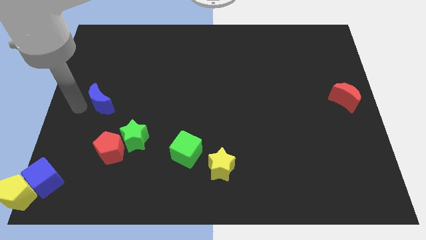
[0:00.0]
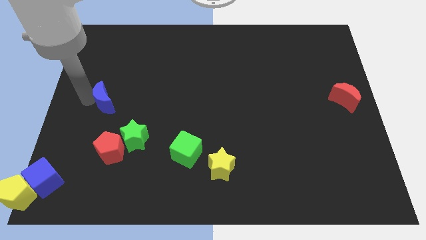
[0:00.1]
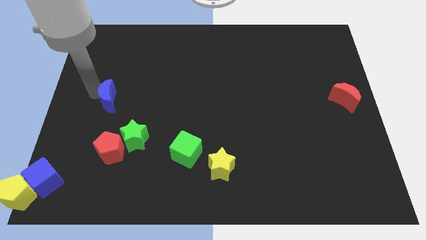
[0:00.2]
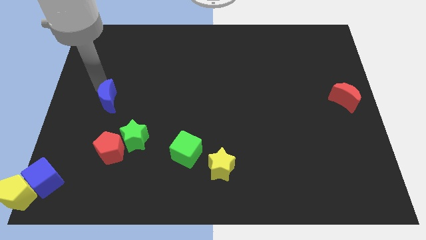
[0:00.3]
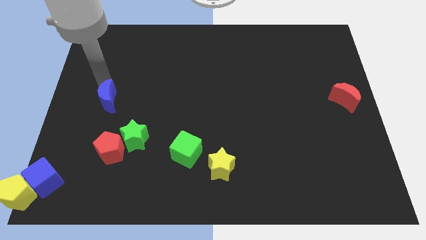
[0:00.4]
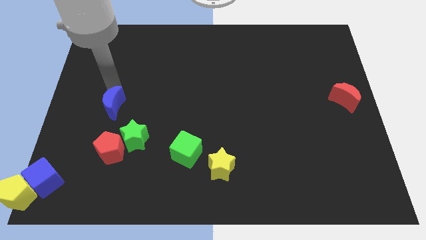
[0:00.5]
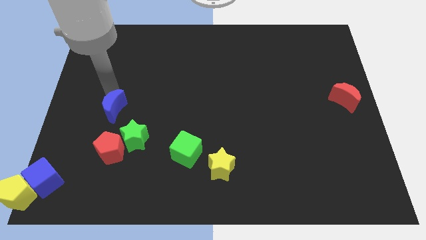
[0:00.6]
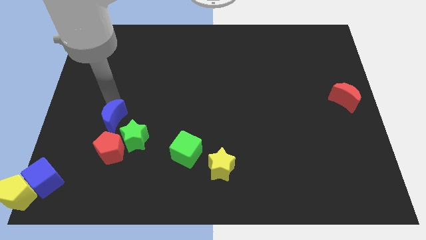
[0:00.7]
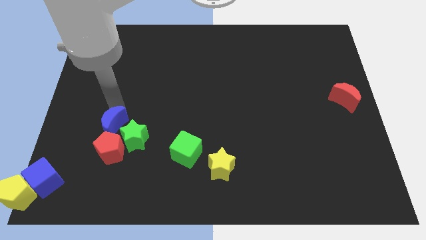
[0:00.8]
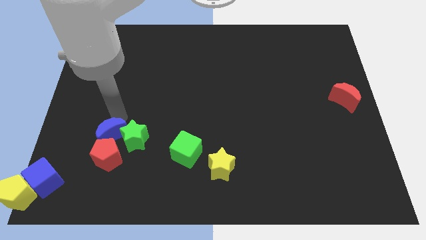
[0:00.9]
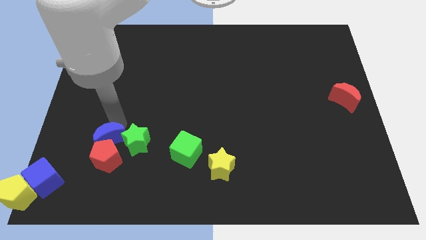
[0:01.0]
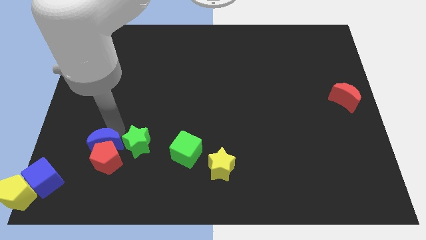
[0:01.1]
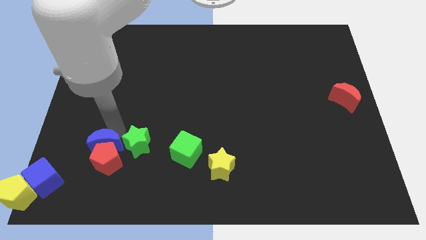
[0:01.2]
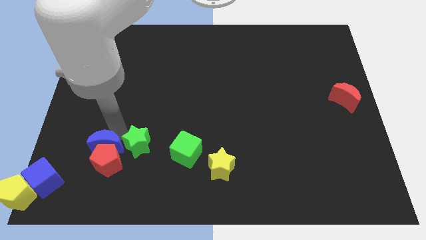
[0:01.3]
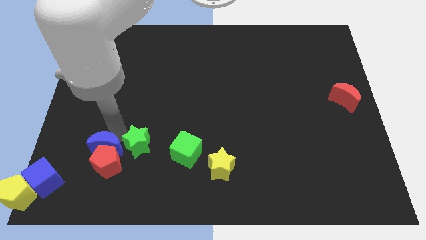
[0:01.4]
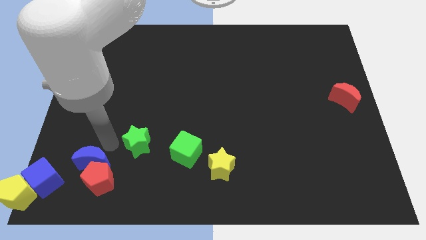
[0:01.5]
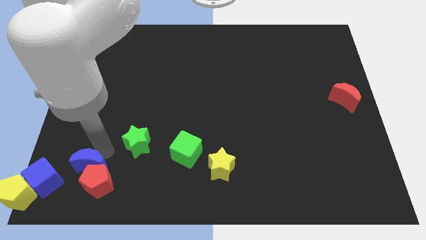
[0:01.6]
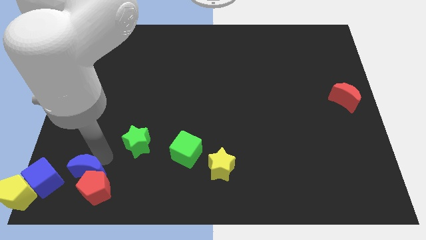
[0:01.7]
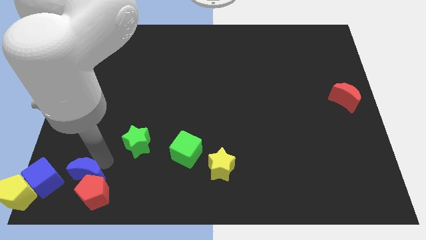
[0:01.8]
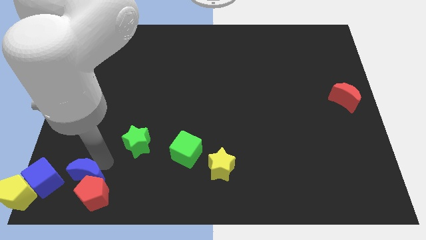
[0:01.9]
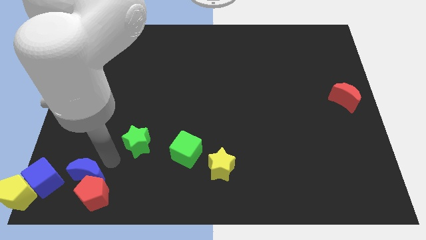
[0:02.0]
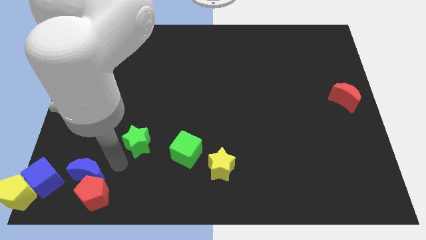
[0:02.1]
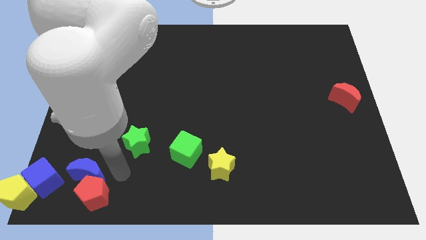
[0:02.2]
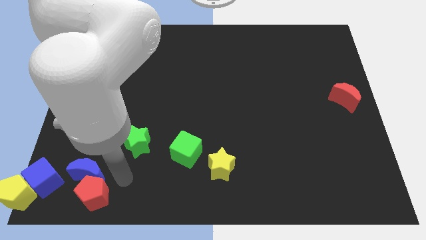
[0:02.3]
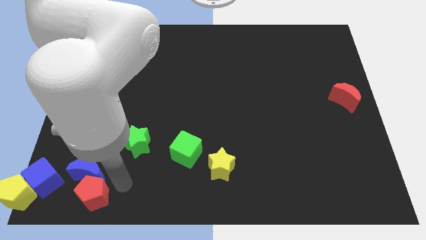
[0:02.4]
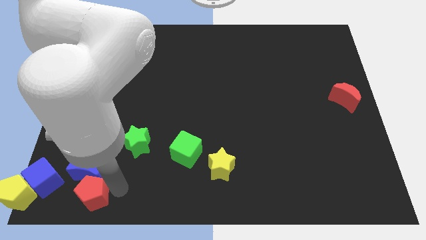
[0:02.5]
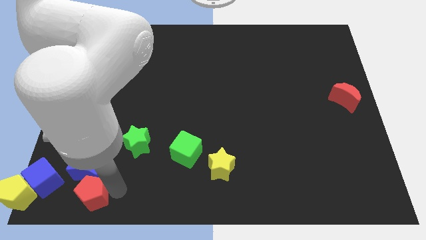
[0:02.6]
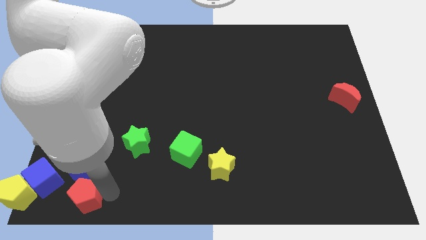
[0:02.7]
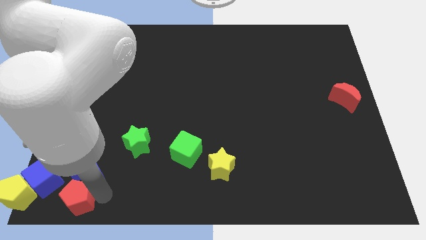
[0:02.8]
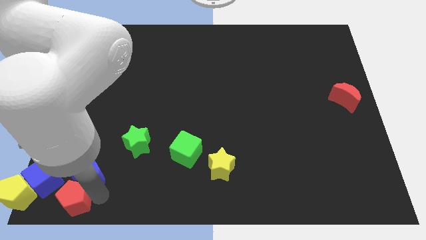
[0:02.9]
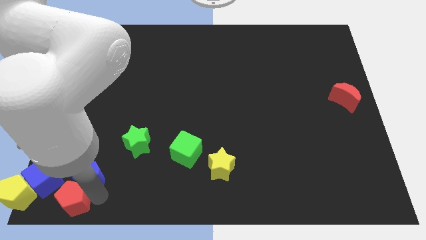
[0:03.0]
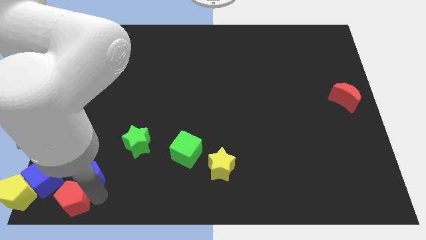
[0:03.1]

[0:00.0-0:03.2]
move blue moon and red pentagon towards bottom left

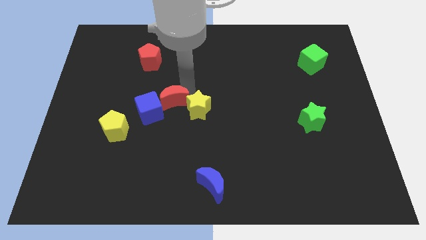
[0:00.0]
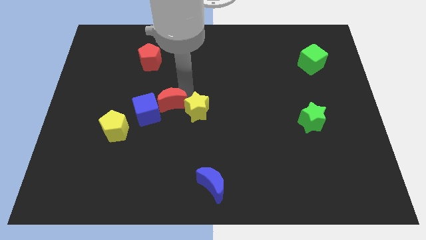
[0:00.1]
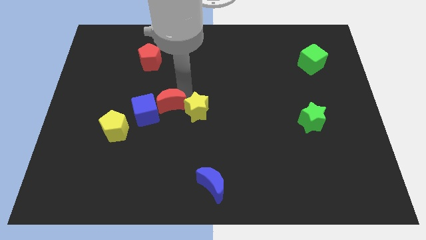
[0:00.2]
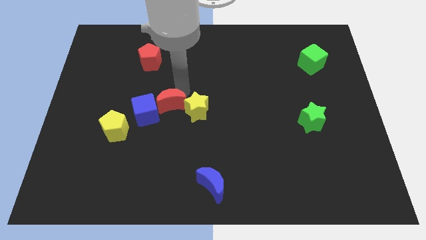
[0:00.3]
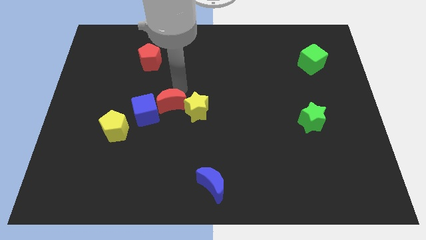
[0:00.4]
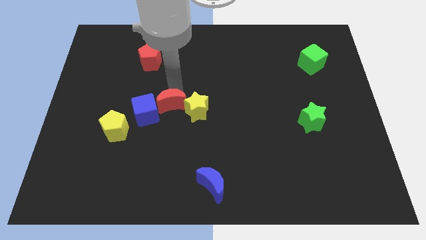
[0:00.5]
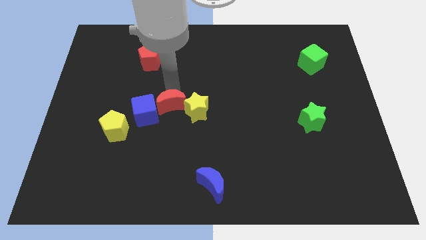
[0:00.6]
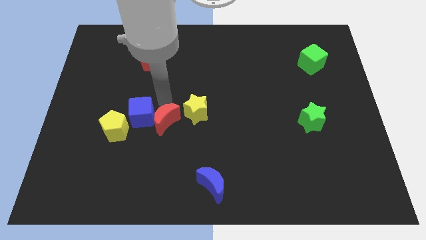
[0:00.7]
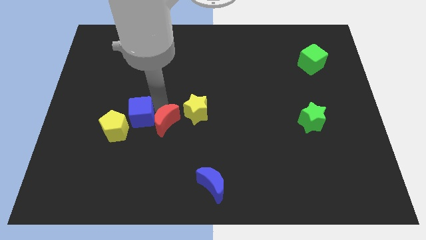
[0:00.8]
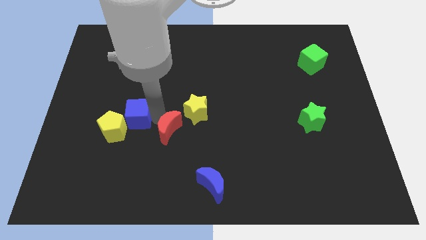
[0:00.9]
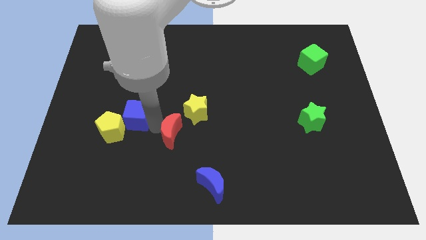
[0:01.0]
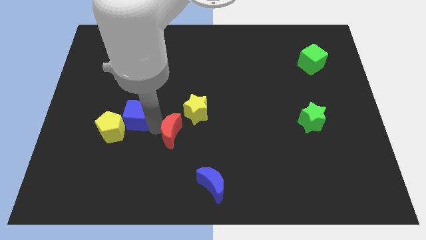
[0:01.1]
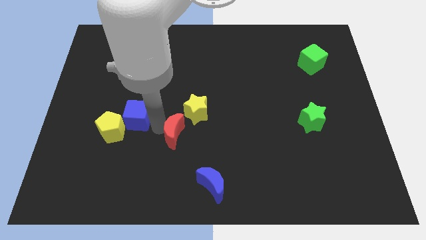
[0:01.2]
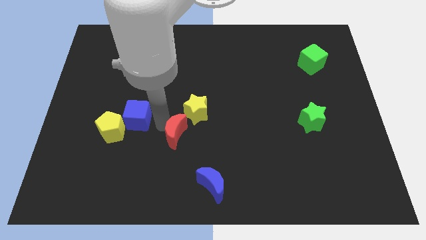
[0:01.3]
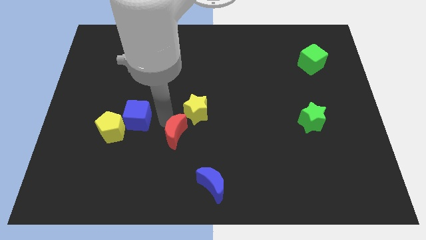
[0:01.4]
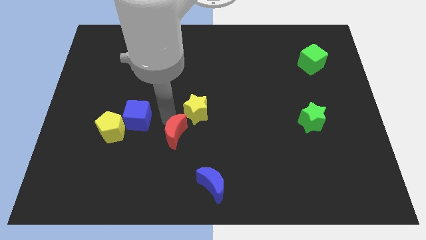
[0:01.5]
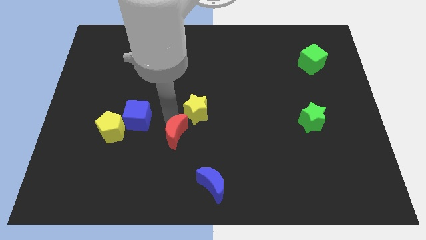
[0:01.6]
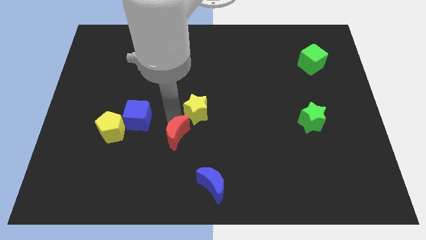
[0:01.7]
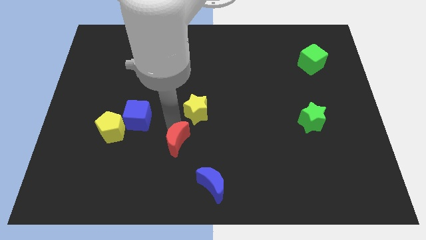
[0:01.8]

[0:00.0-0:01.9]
push the red moon towards the blue crescent

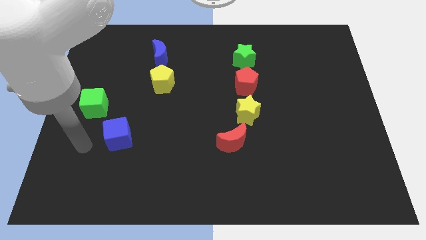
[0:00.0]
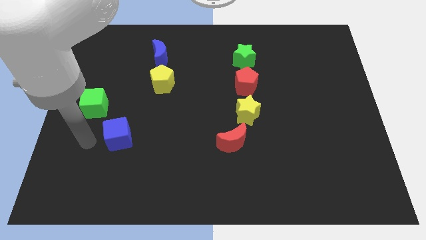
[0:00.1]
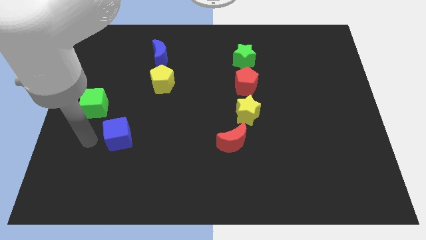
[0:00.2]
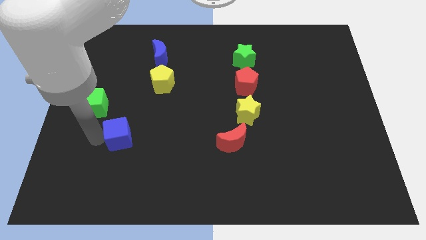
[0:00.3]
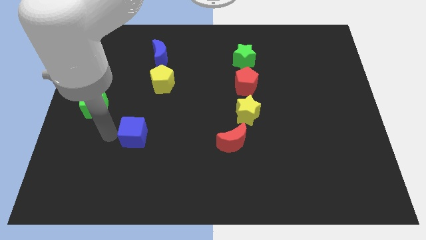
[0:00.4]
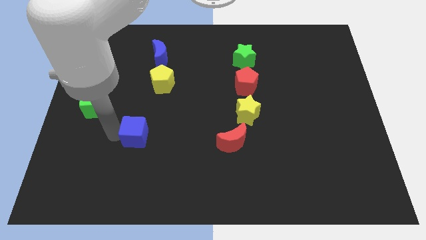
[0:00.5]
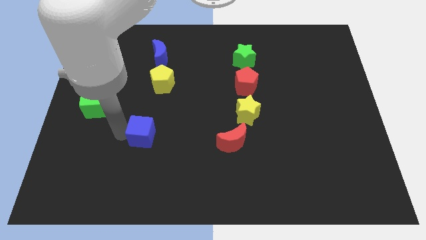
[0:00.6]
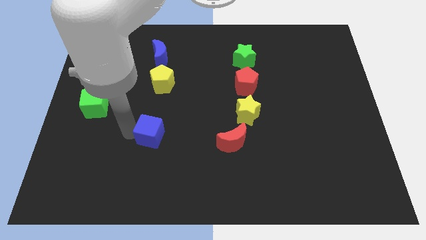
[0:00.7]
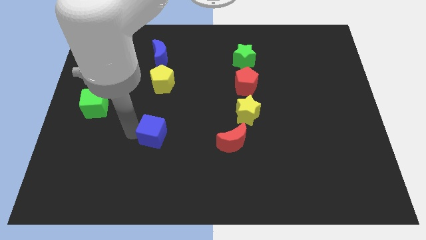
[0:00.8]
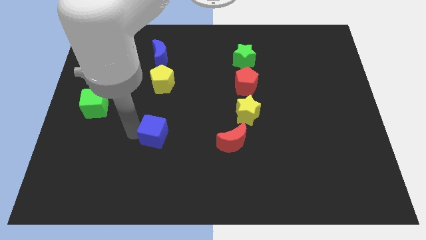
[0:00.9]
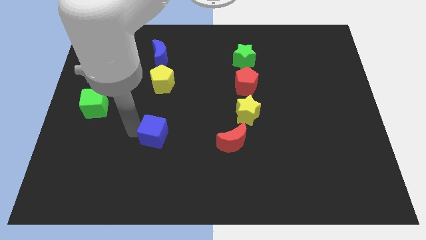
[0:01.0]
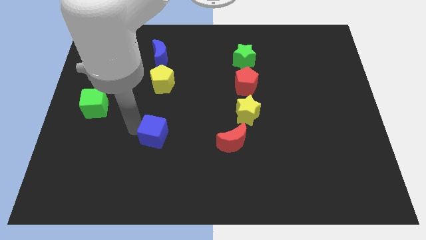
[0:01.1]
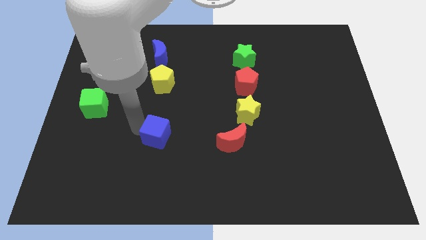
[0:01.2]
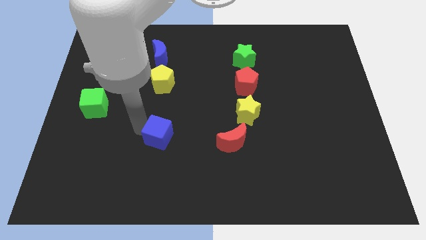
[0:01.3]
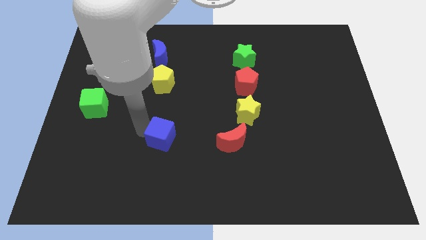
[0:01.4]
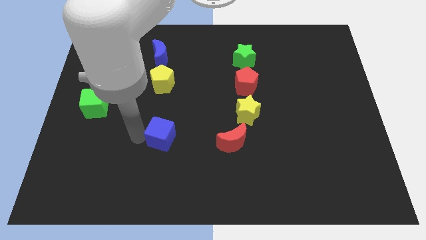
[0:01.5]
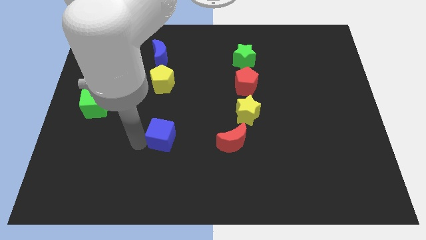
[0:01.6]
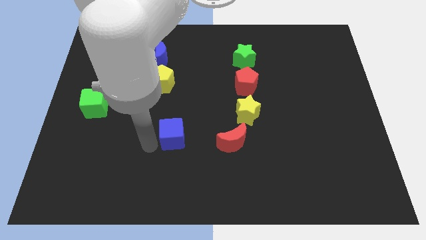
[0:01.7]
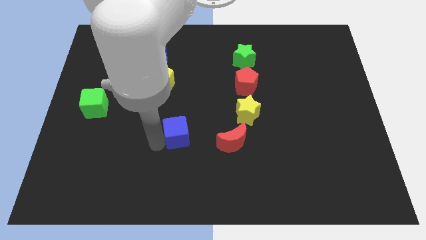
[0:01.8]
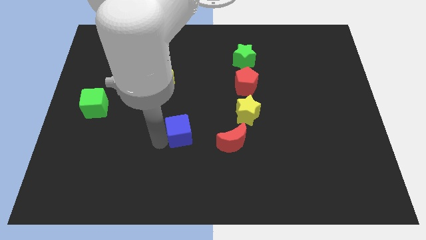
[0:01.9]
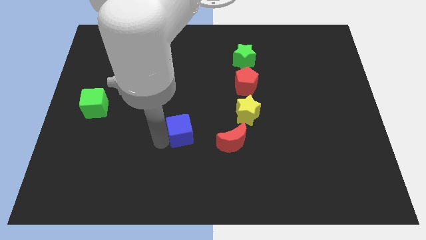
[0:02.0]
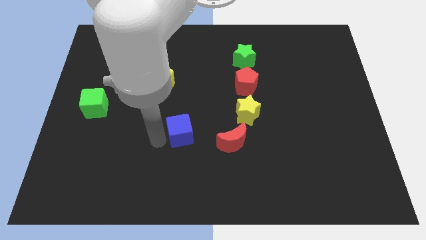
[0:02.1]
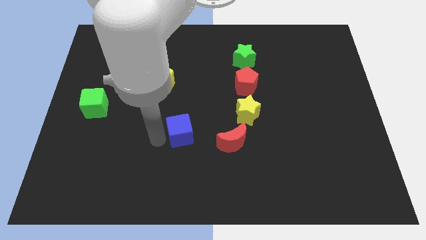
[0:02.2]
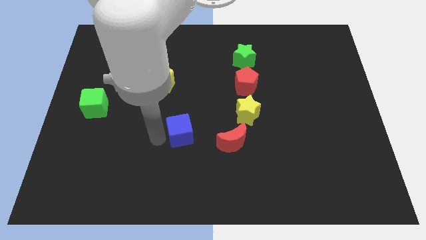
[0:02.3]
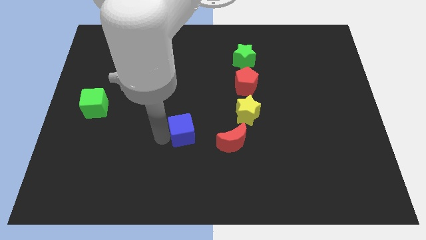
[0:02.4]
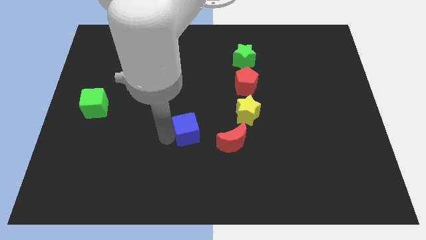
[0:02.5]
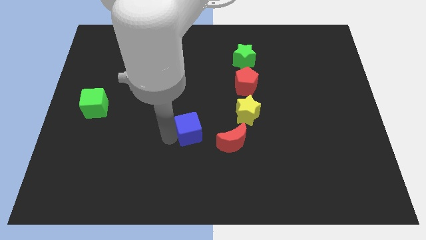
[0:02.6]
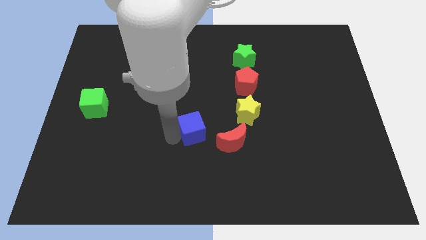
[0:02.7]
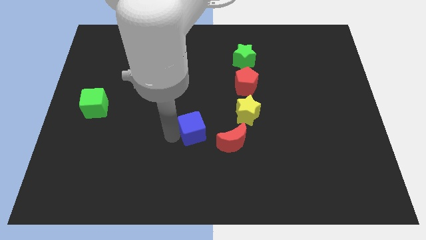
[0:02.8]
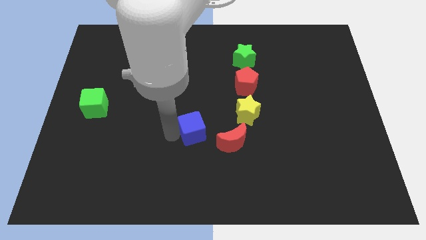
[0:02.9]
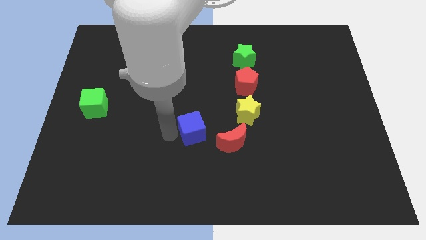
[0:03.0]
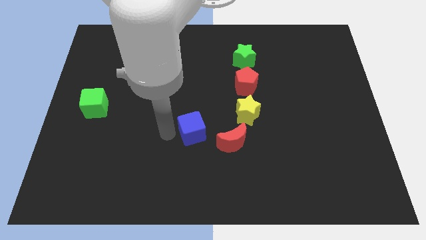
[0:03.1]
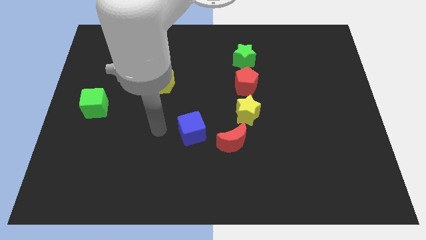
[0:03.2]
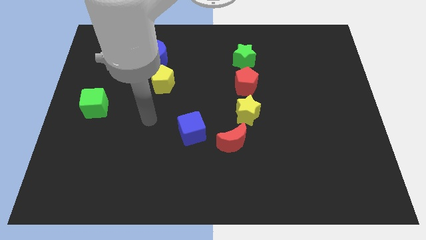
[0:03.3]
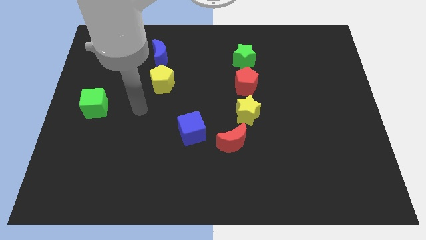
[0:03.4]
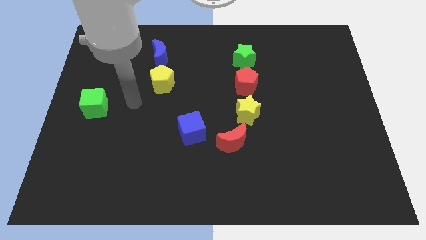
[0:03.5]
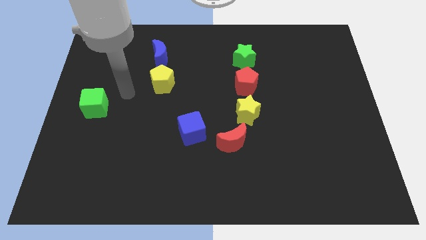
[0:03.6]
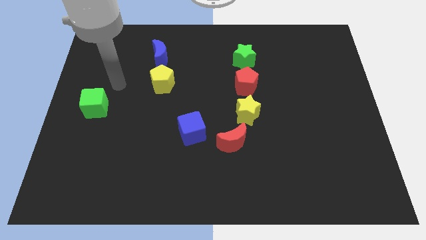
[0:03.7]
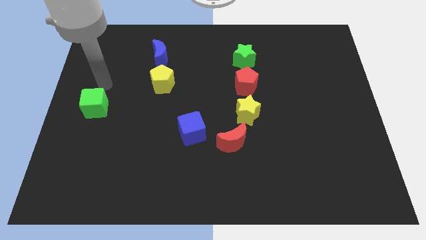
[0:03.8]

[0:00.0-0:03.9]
move blue cube towards red moon
